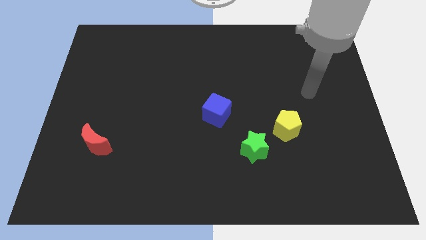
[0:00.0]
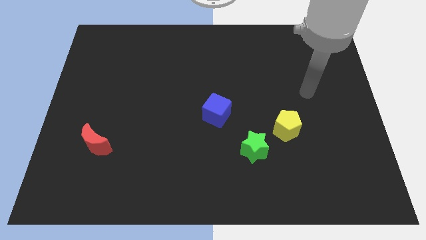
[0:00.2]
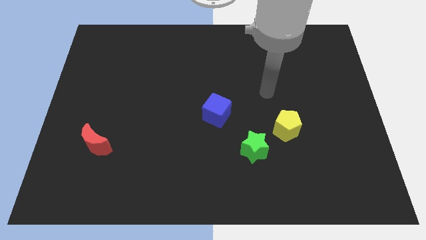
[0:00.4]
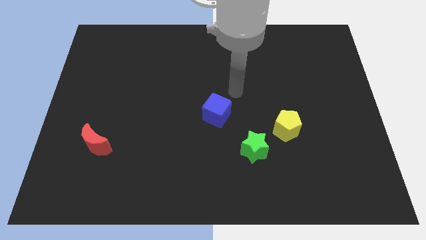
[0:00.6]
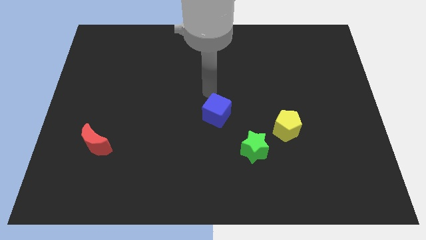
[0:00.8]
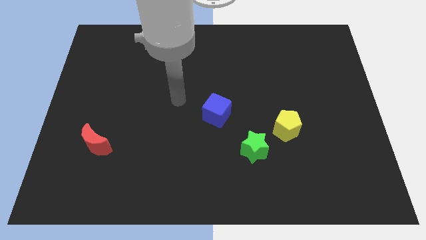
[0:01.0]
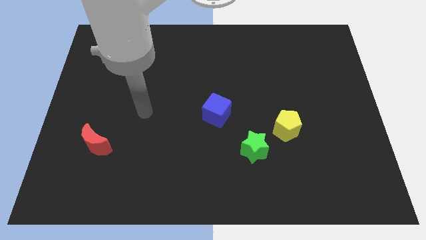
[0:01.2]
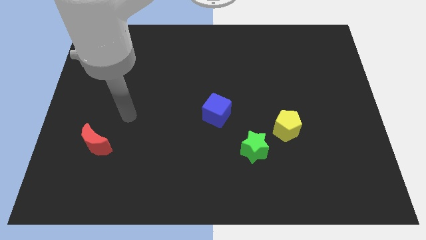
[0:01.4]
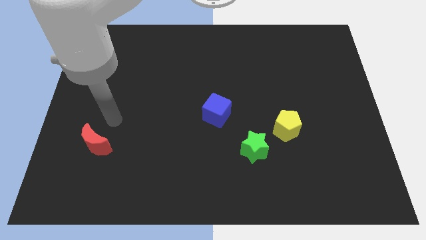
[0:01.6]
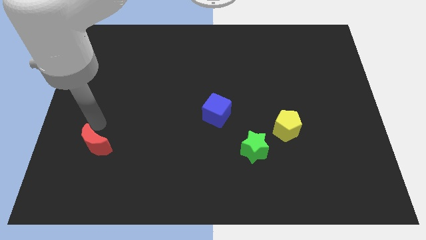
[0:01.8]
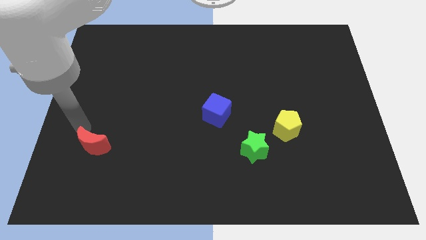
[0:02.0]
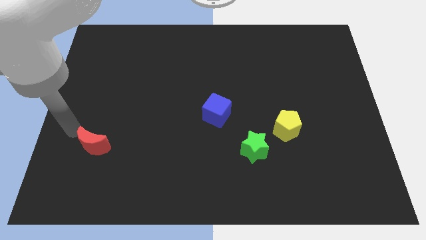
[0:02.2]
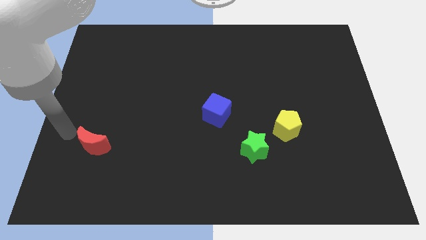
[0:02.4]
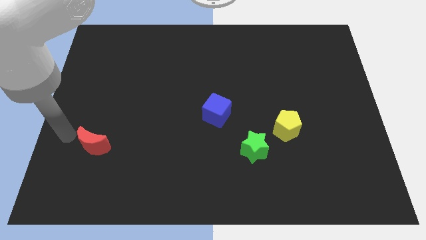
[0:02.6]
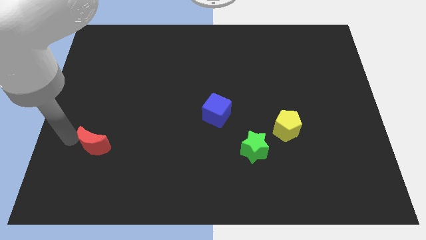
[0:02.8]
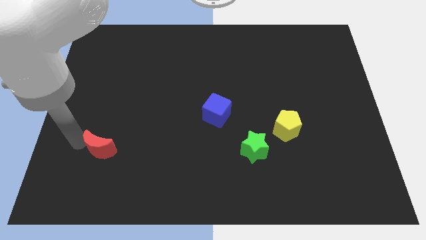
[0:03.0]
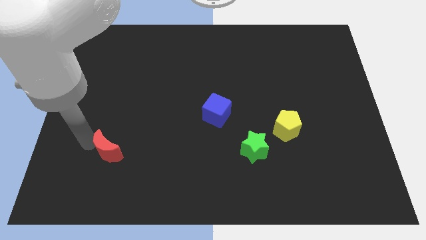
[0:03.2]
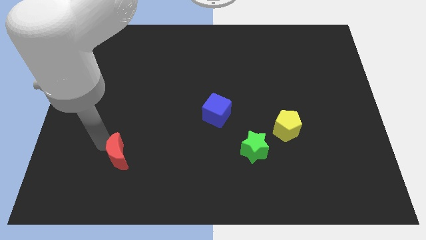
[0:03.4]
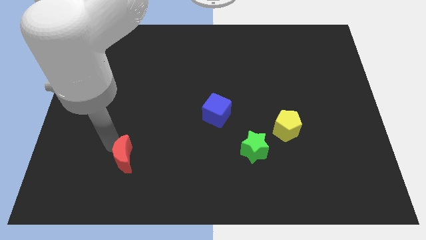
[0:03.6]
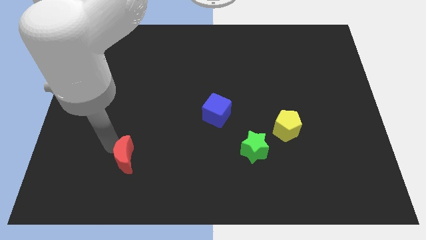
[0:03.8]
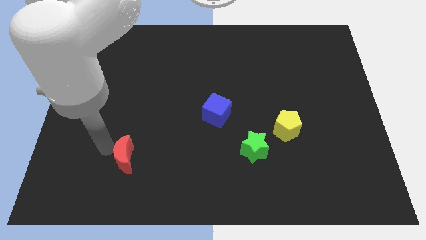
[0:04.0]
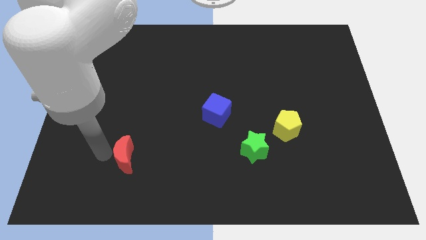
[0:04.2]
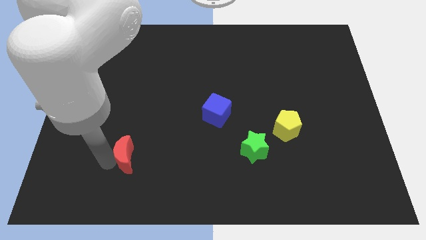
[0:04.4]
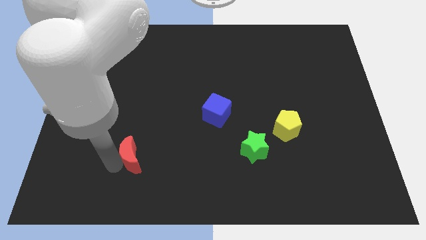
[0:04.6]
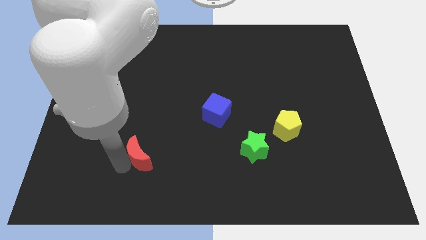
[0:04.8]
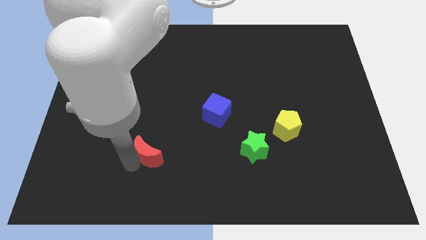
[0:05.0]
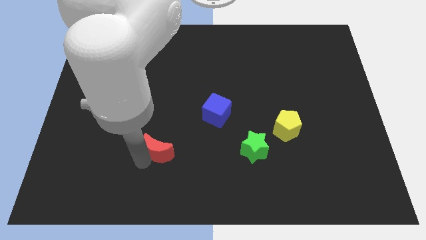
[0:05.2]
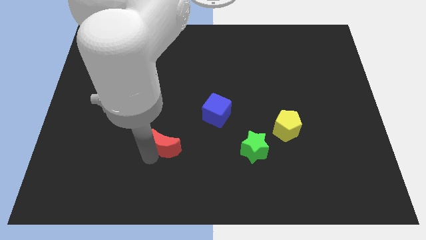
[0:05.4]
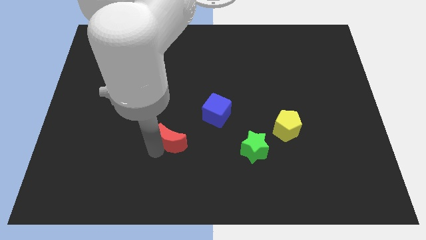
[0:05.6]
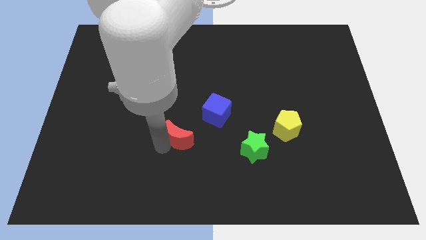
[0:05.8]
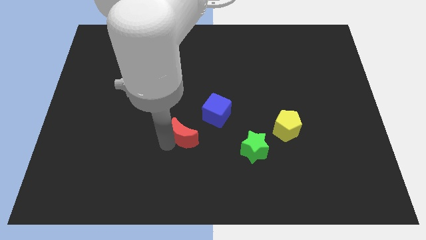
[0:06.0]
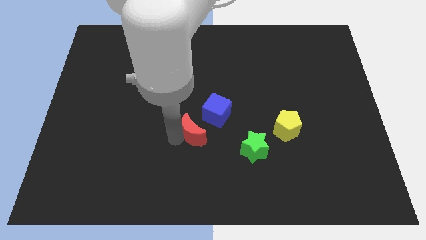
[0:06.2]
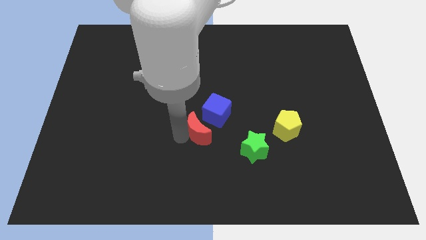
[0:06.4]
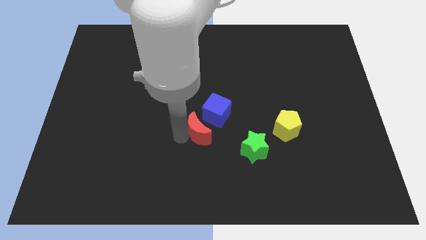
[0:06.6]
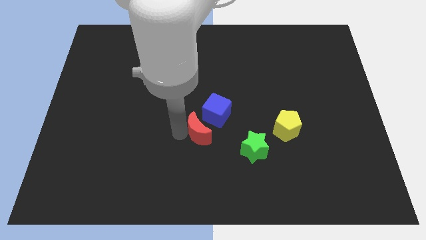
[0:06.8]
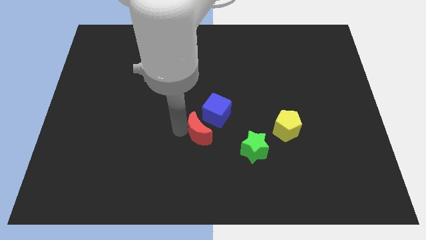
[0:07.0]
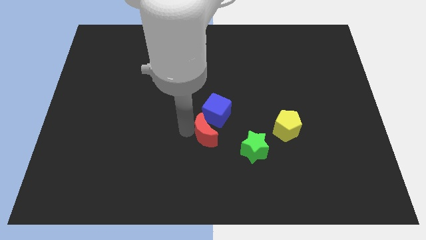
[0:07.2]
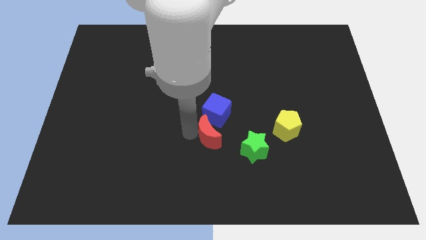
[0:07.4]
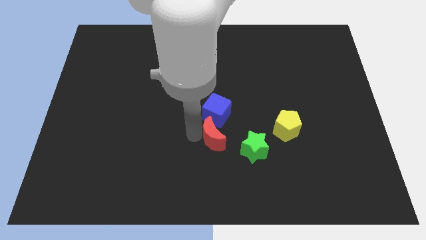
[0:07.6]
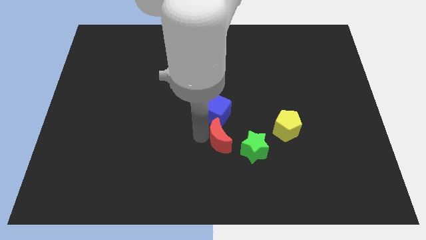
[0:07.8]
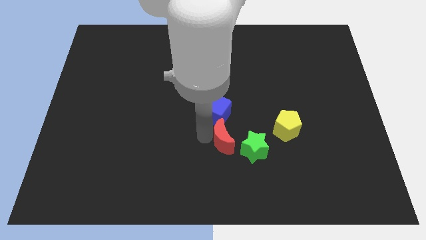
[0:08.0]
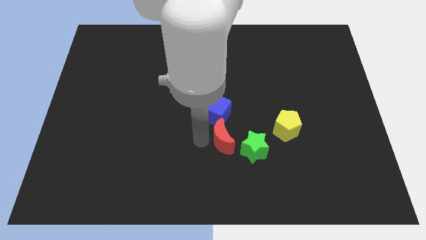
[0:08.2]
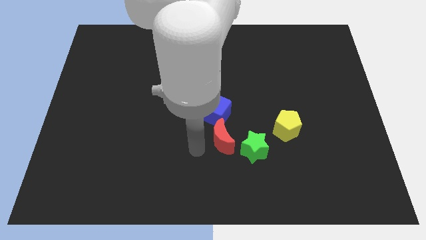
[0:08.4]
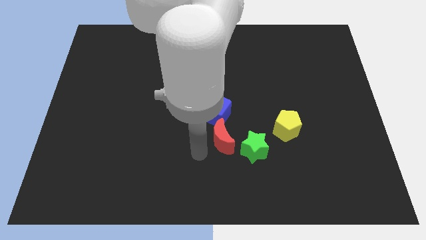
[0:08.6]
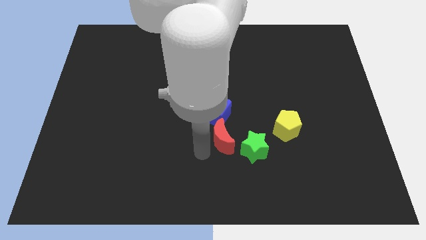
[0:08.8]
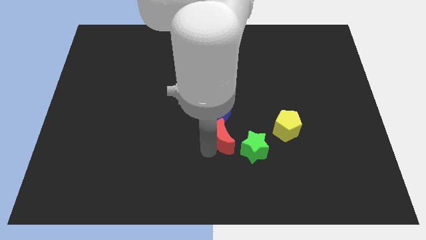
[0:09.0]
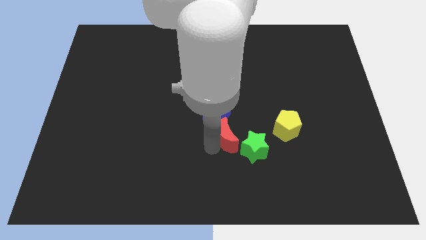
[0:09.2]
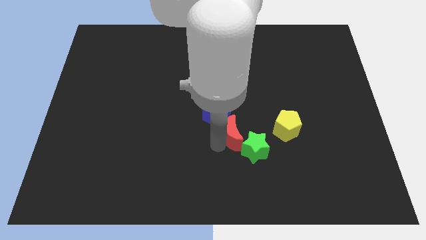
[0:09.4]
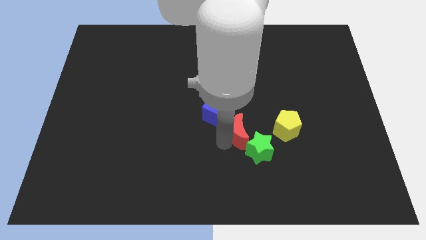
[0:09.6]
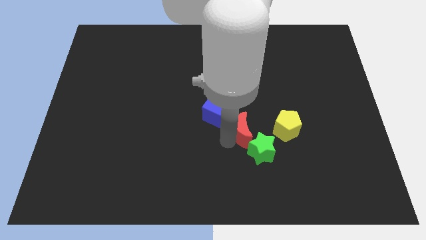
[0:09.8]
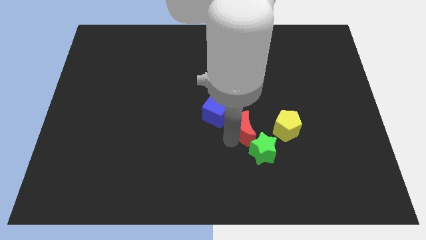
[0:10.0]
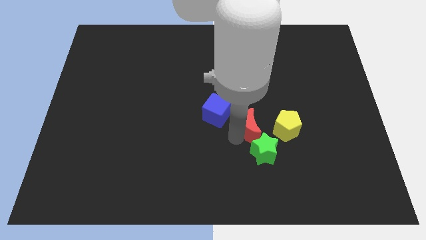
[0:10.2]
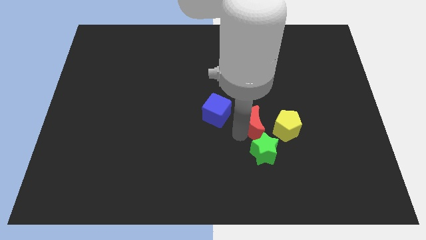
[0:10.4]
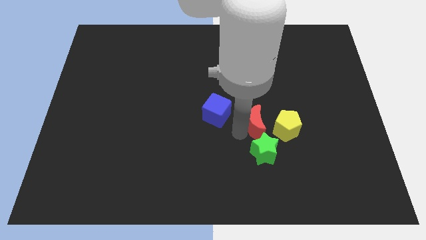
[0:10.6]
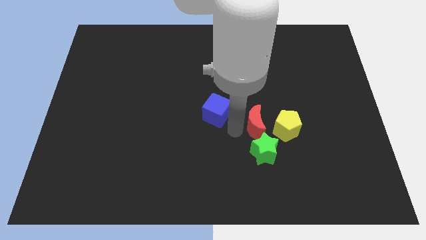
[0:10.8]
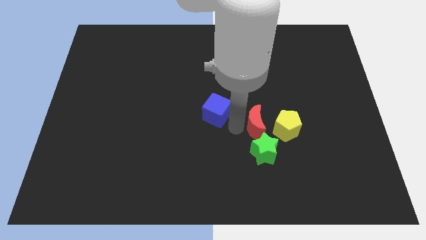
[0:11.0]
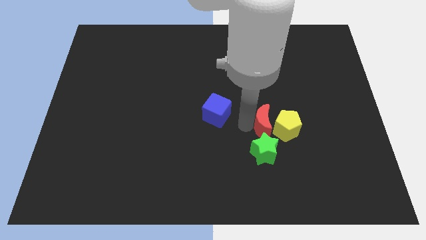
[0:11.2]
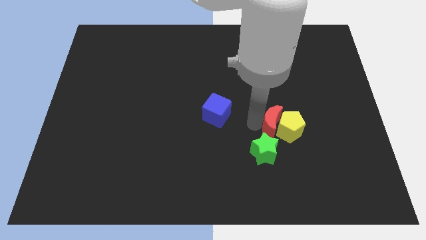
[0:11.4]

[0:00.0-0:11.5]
slide the red moon towards the yellow block

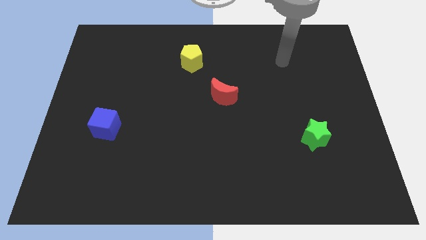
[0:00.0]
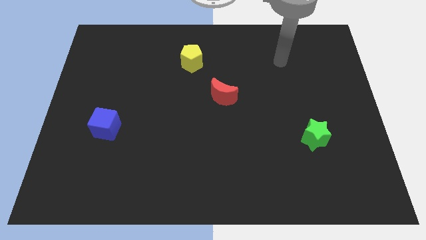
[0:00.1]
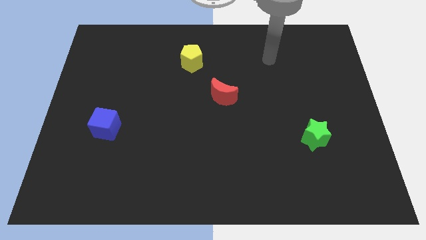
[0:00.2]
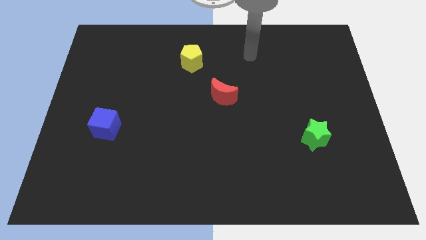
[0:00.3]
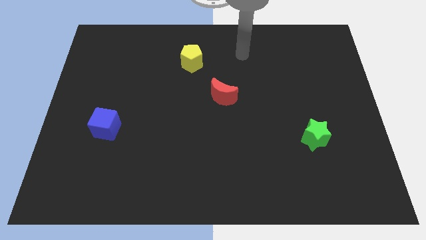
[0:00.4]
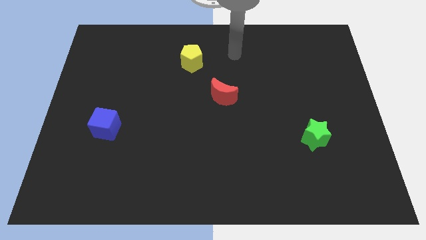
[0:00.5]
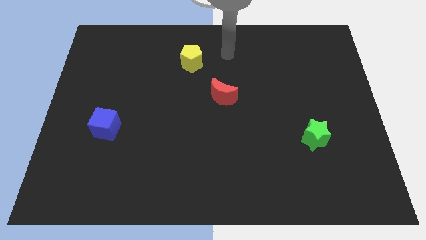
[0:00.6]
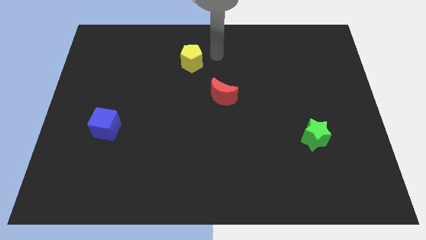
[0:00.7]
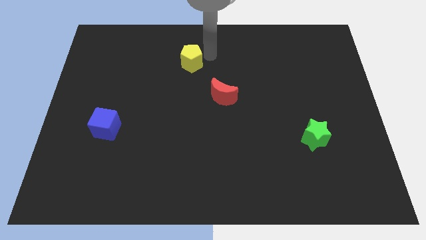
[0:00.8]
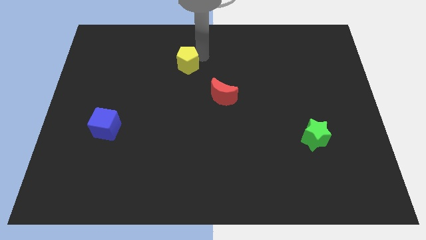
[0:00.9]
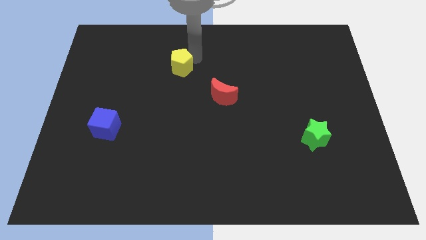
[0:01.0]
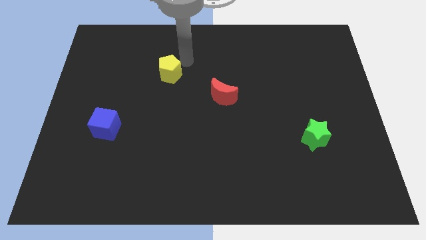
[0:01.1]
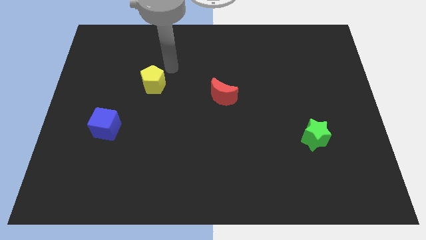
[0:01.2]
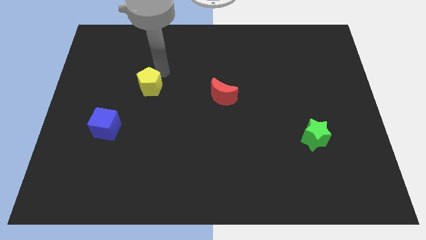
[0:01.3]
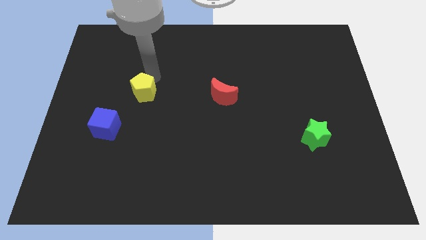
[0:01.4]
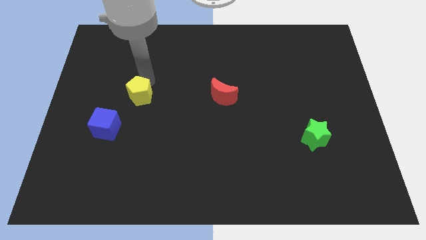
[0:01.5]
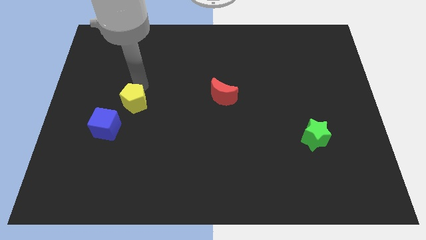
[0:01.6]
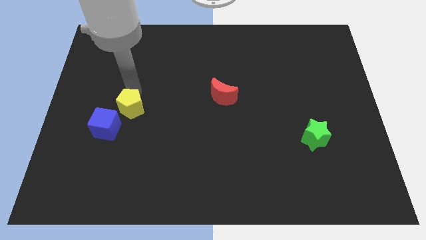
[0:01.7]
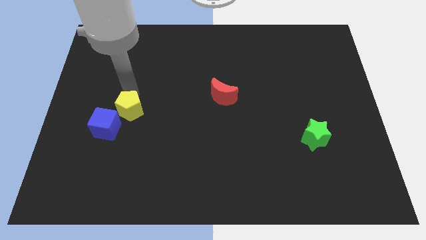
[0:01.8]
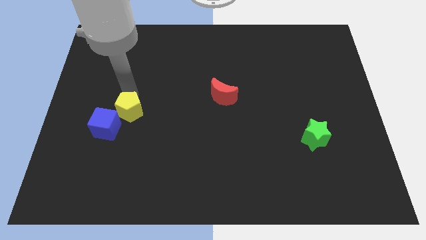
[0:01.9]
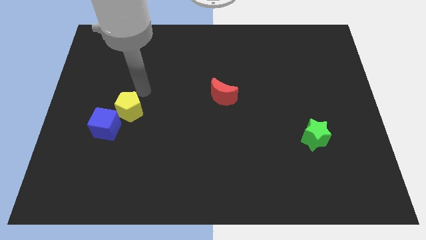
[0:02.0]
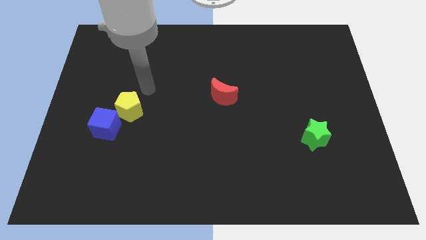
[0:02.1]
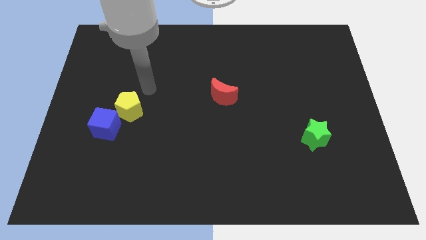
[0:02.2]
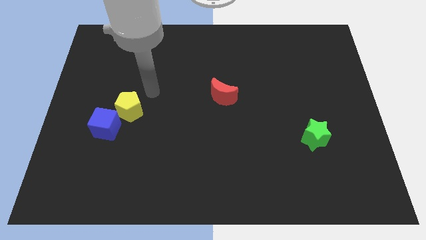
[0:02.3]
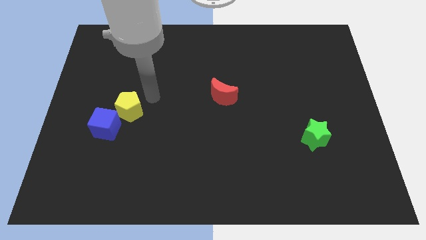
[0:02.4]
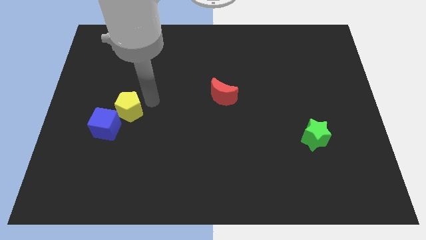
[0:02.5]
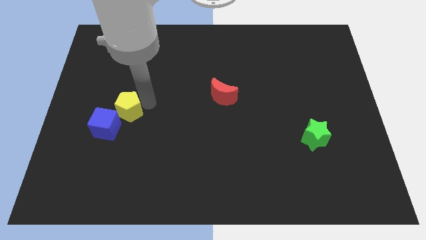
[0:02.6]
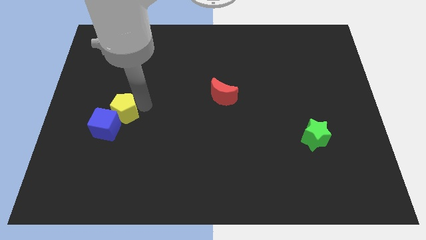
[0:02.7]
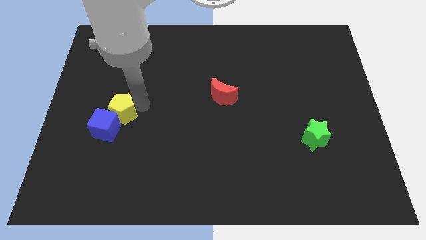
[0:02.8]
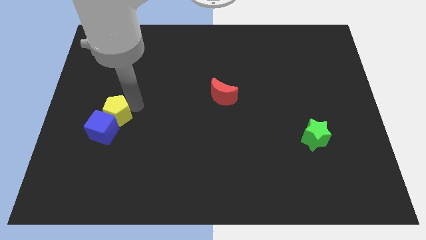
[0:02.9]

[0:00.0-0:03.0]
move the yellow pentagon next to the blue block
